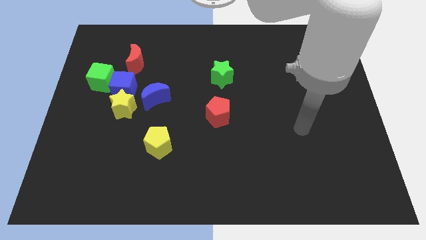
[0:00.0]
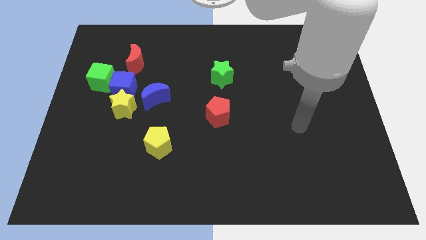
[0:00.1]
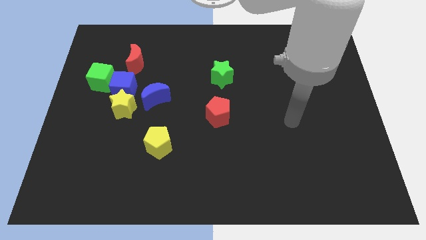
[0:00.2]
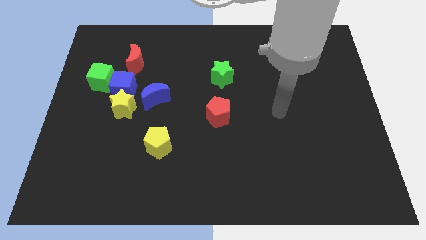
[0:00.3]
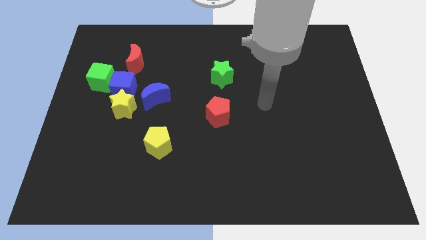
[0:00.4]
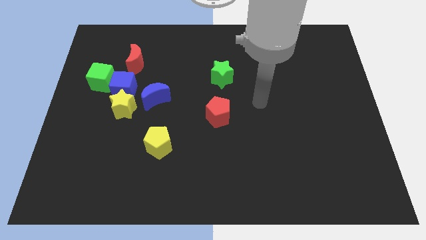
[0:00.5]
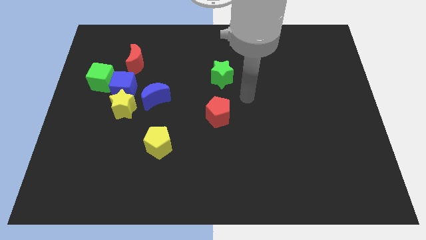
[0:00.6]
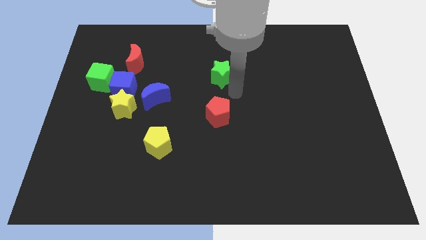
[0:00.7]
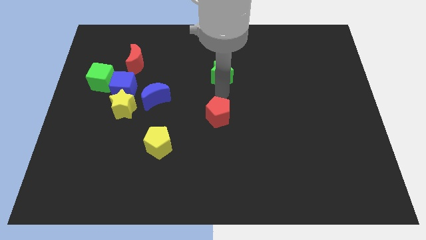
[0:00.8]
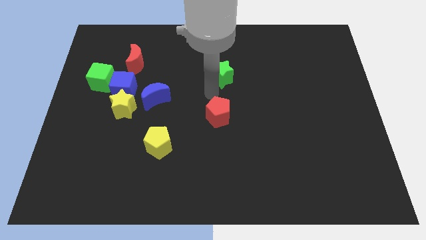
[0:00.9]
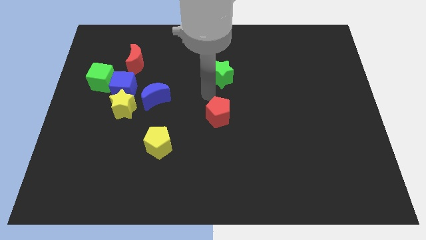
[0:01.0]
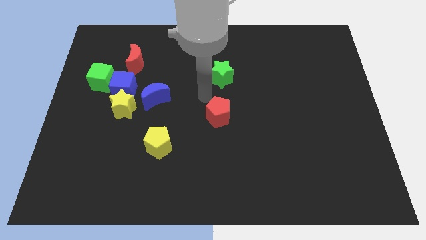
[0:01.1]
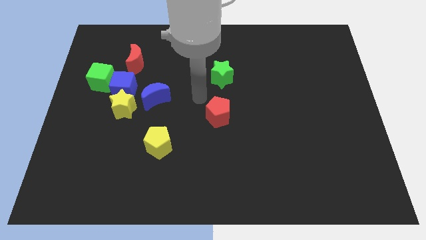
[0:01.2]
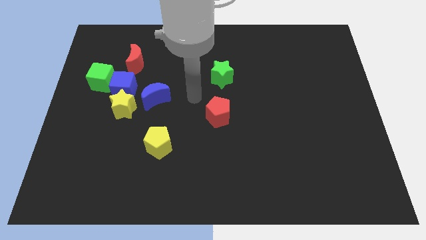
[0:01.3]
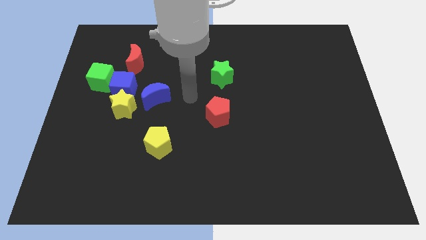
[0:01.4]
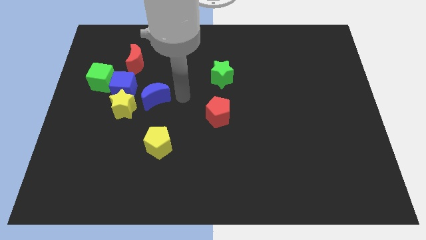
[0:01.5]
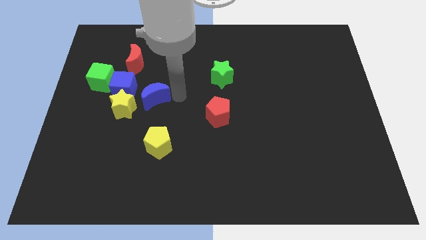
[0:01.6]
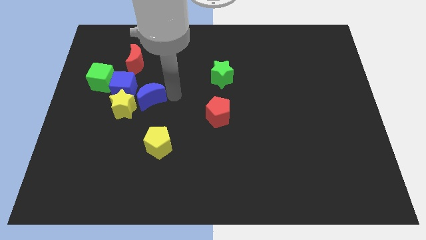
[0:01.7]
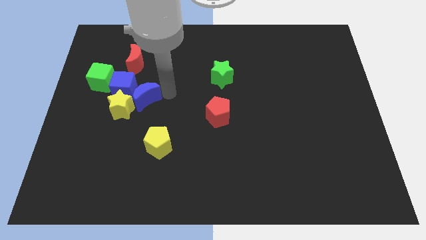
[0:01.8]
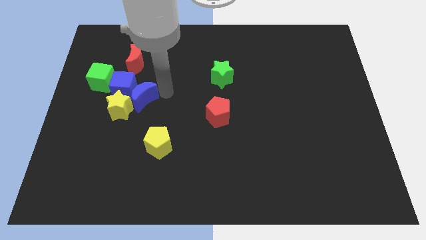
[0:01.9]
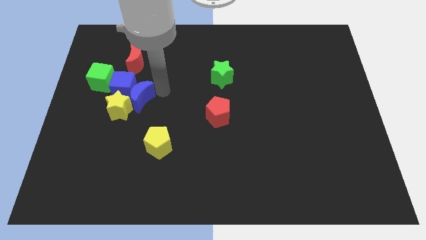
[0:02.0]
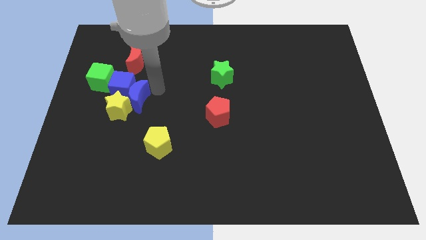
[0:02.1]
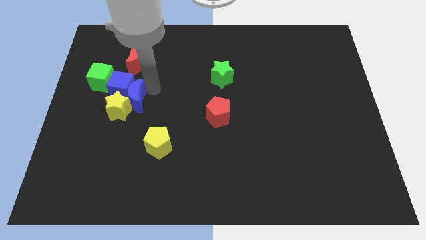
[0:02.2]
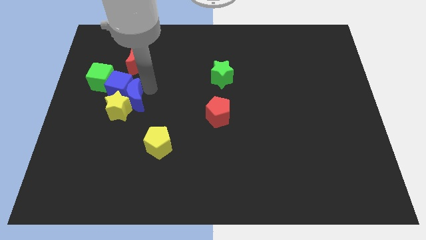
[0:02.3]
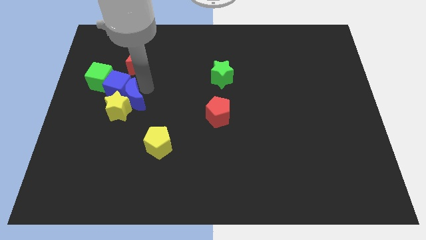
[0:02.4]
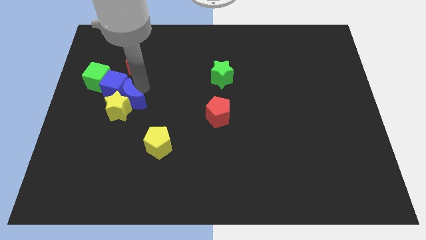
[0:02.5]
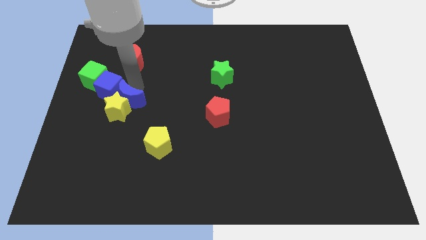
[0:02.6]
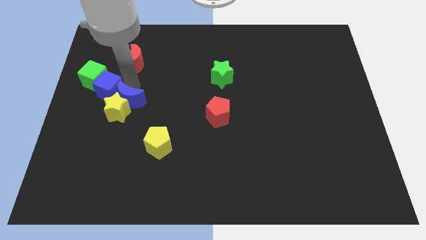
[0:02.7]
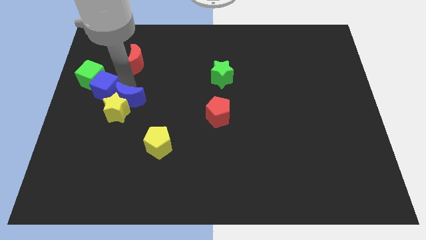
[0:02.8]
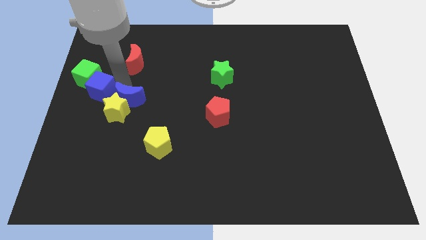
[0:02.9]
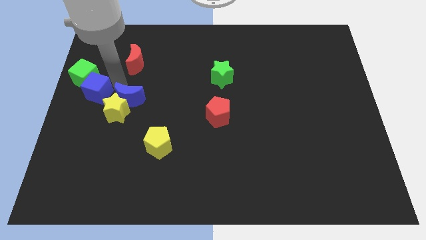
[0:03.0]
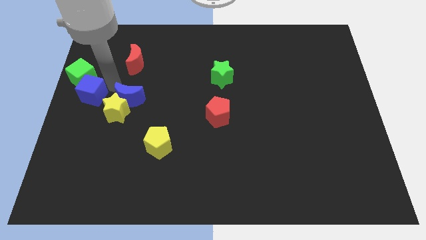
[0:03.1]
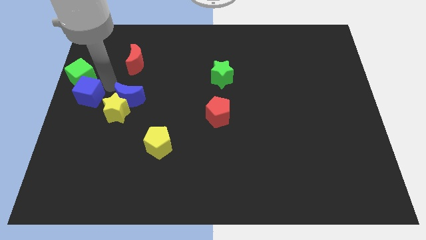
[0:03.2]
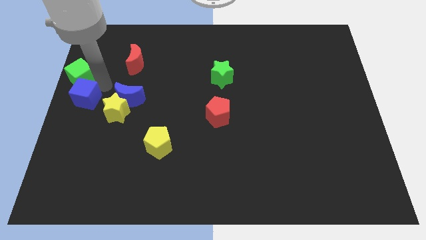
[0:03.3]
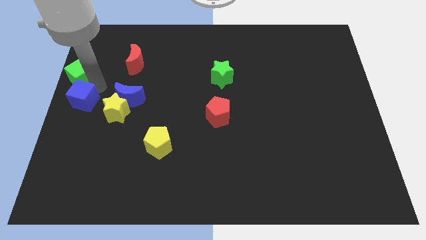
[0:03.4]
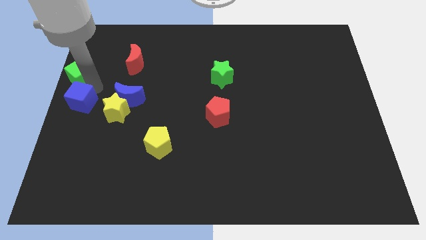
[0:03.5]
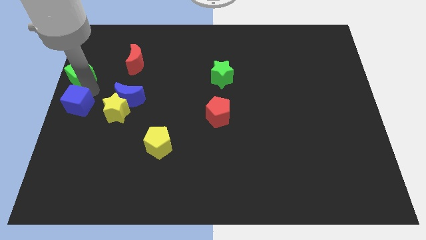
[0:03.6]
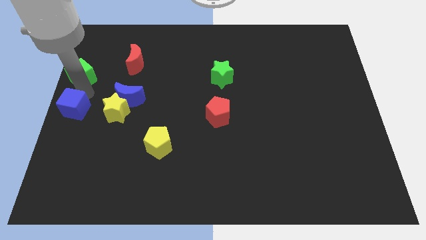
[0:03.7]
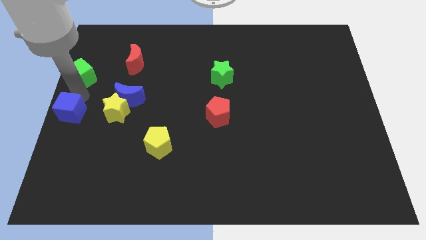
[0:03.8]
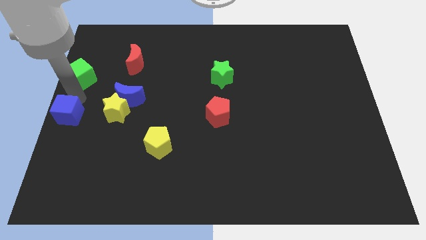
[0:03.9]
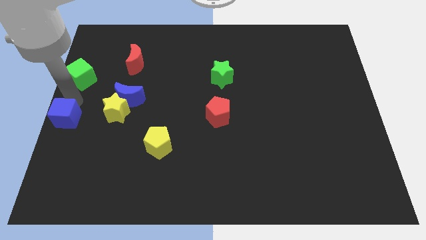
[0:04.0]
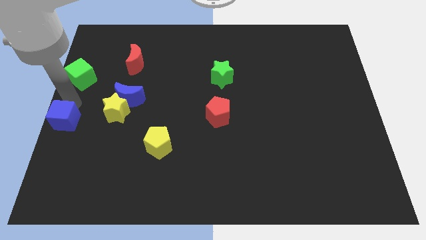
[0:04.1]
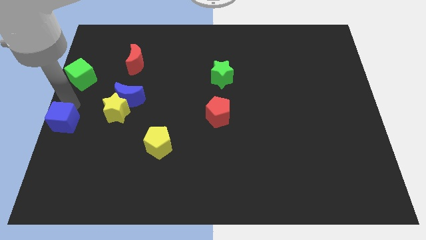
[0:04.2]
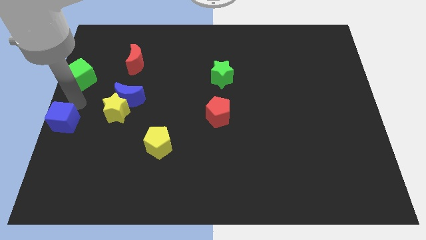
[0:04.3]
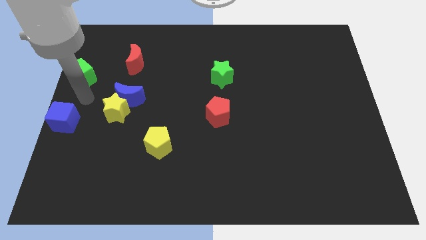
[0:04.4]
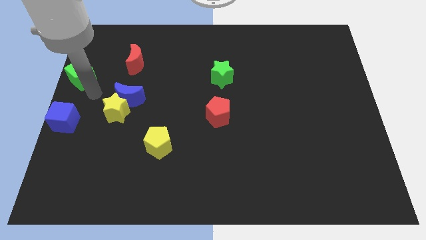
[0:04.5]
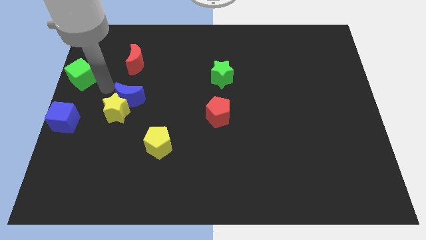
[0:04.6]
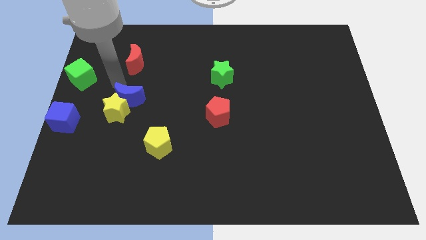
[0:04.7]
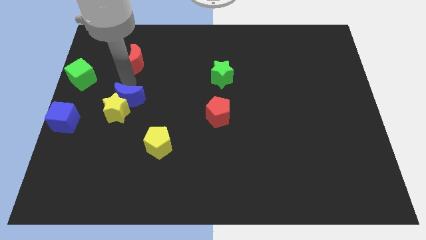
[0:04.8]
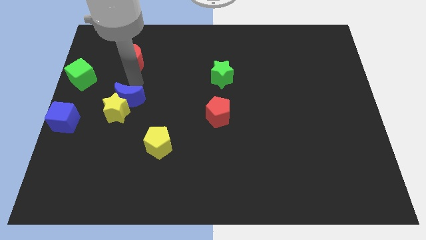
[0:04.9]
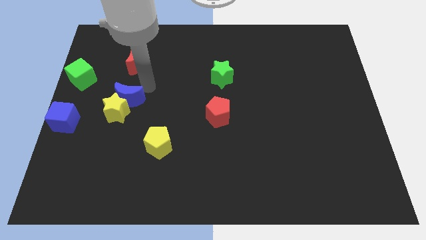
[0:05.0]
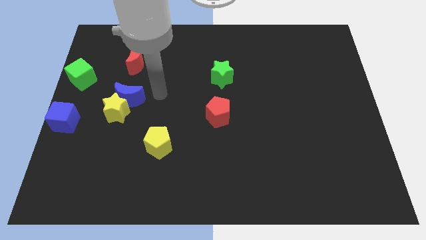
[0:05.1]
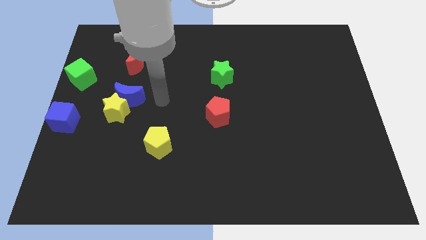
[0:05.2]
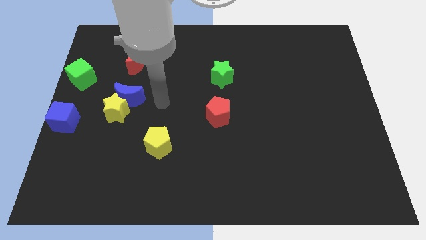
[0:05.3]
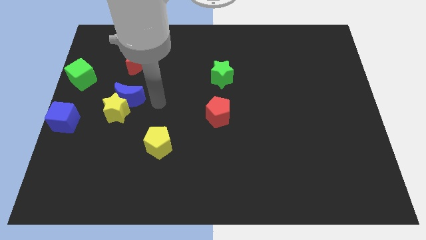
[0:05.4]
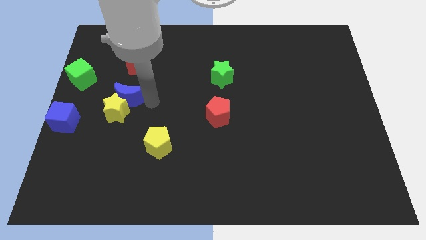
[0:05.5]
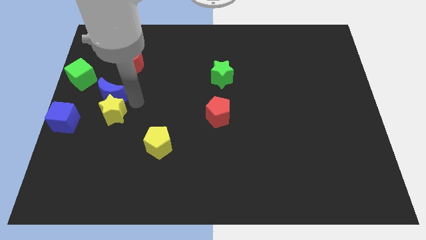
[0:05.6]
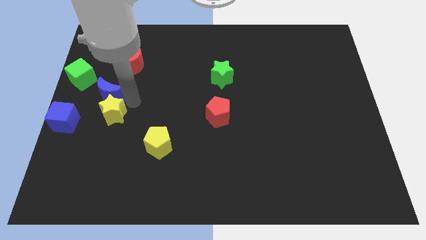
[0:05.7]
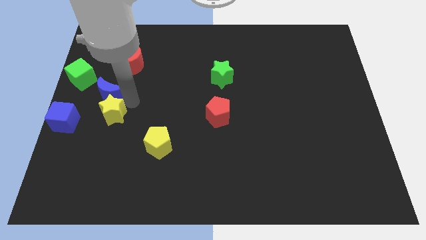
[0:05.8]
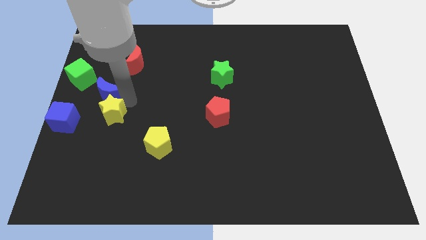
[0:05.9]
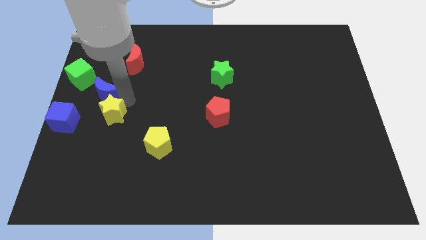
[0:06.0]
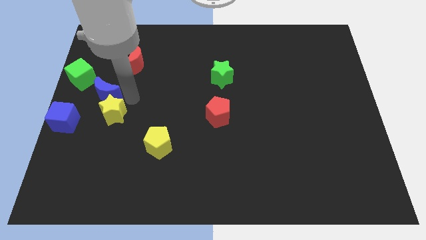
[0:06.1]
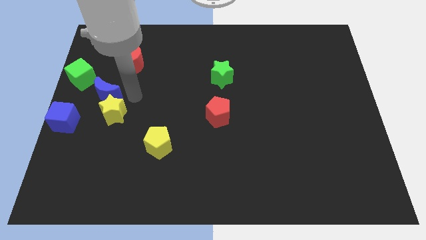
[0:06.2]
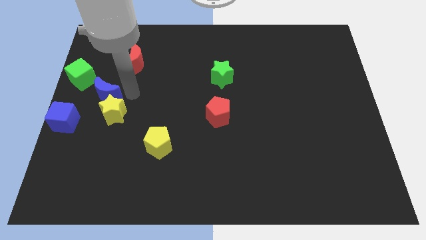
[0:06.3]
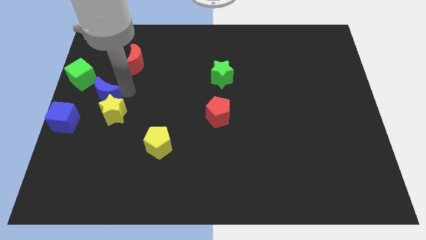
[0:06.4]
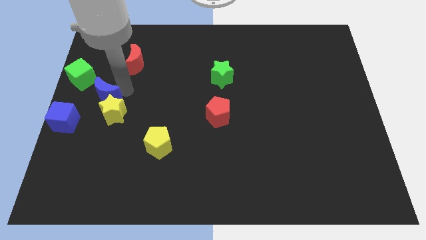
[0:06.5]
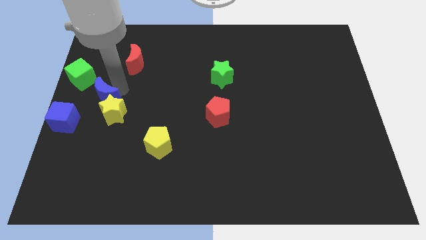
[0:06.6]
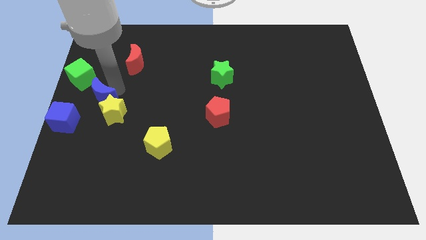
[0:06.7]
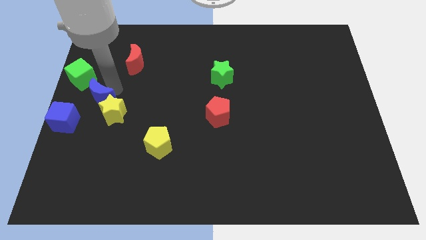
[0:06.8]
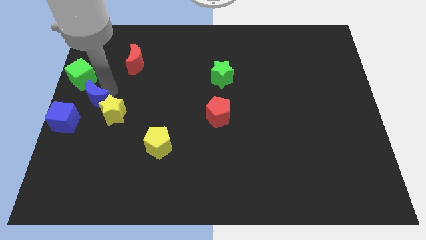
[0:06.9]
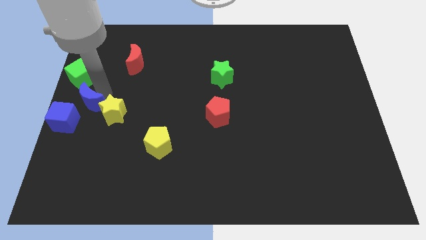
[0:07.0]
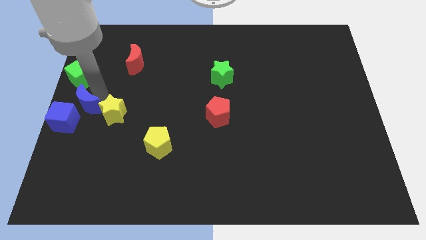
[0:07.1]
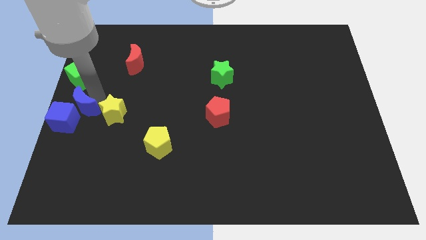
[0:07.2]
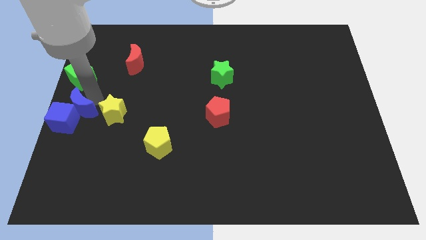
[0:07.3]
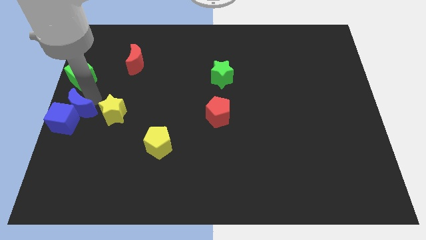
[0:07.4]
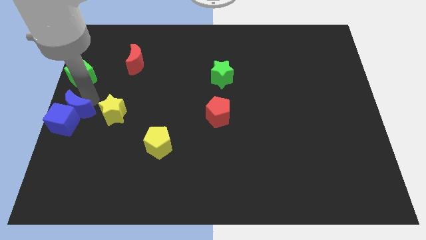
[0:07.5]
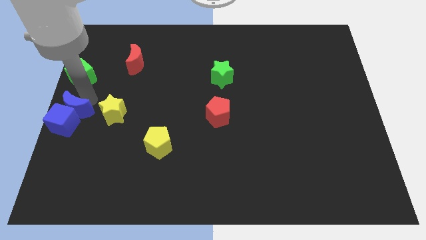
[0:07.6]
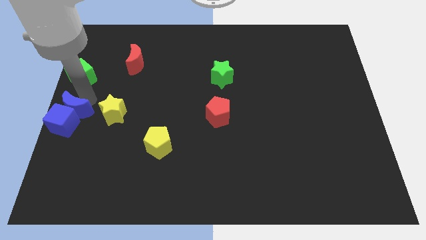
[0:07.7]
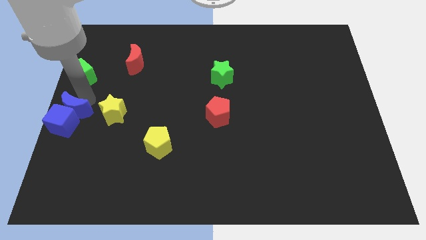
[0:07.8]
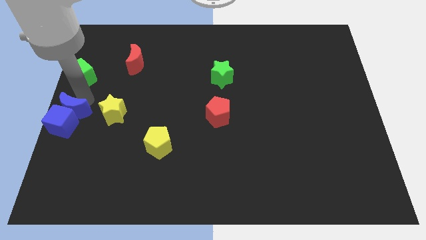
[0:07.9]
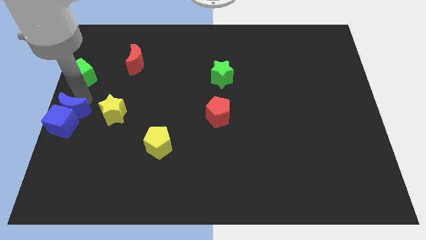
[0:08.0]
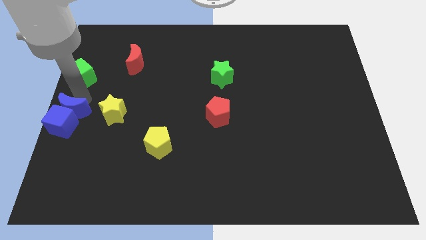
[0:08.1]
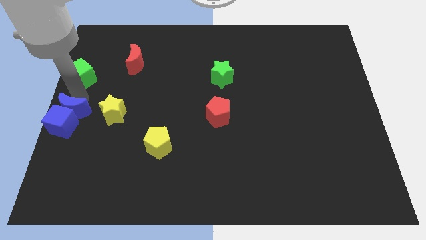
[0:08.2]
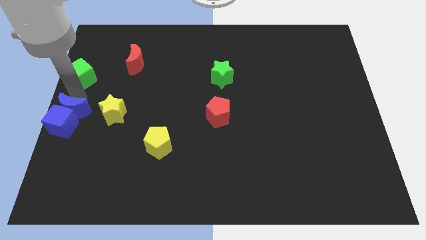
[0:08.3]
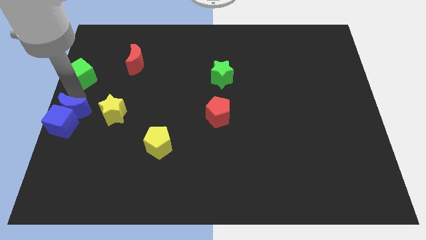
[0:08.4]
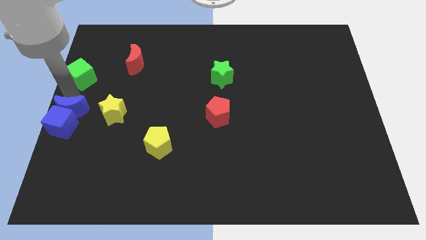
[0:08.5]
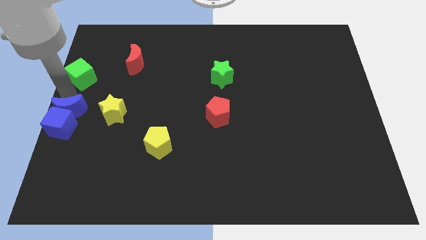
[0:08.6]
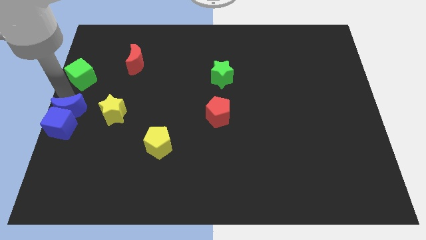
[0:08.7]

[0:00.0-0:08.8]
push the blue blocks to the center left of the board
